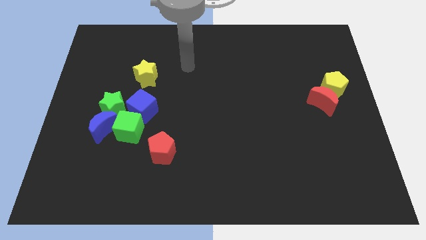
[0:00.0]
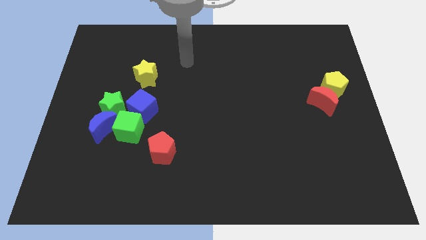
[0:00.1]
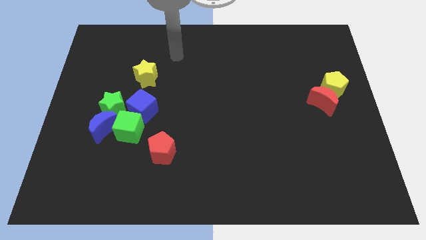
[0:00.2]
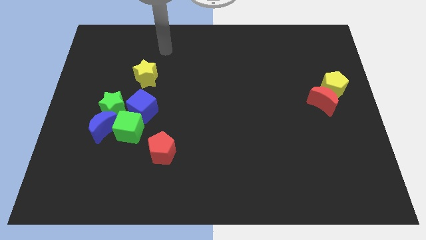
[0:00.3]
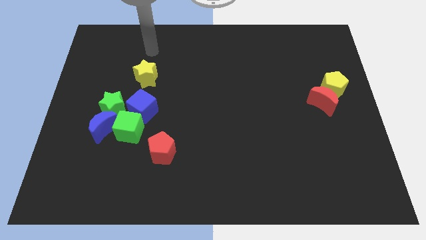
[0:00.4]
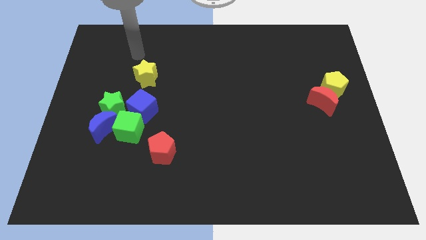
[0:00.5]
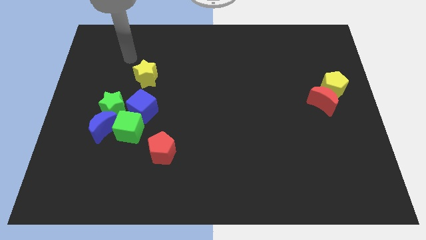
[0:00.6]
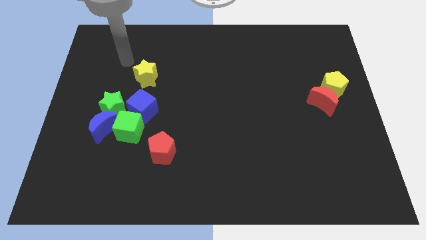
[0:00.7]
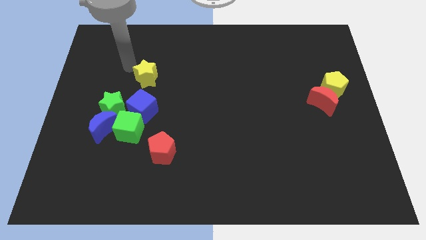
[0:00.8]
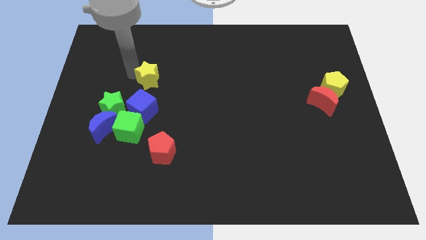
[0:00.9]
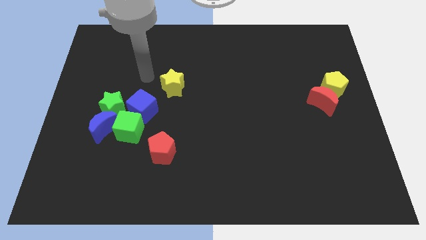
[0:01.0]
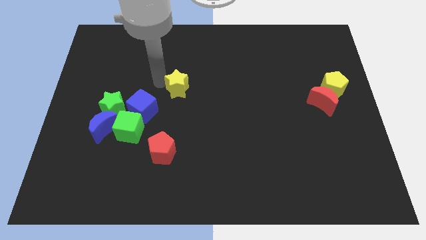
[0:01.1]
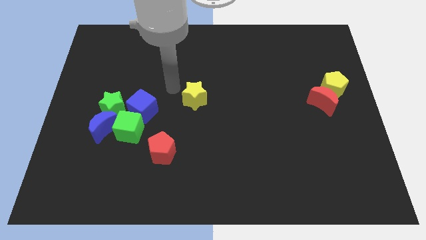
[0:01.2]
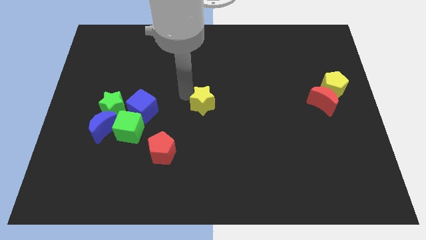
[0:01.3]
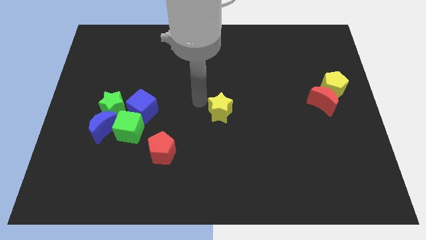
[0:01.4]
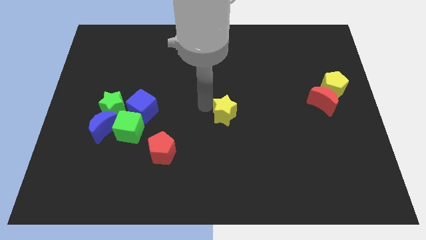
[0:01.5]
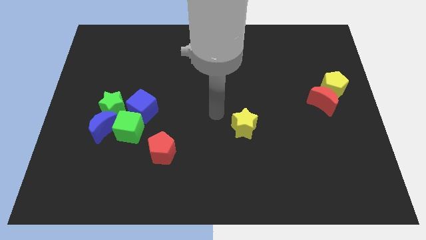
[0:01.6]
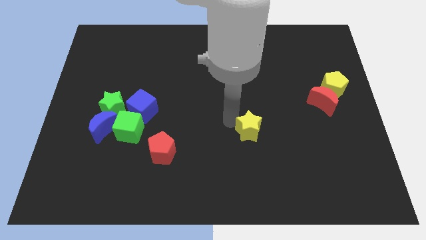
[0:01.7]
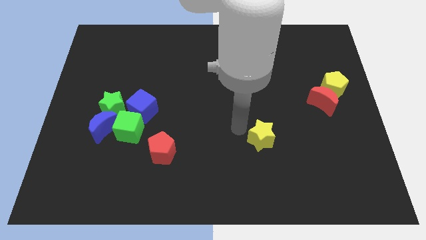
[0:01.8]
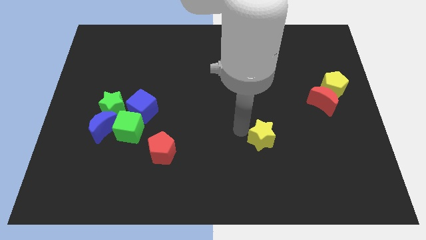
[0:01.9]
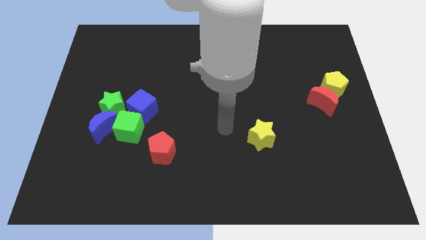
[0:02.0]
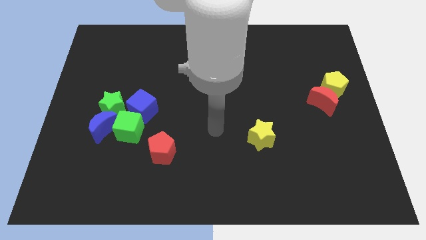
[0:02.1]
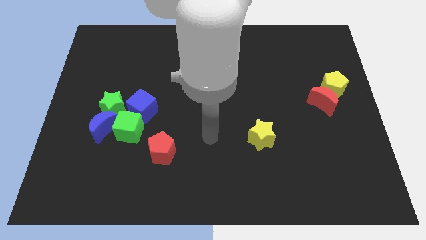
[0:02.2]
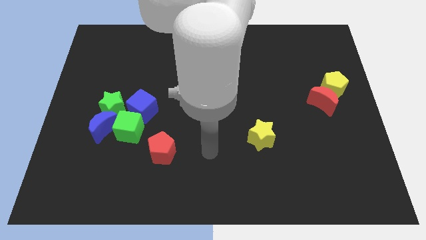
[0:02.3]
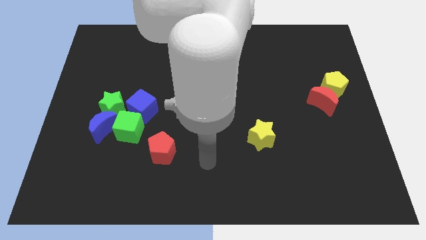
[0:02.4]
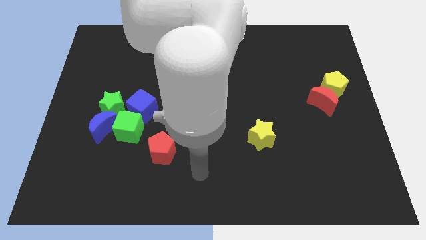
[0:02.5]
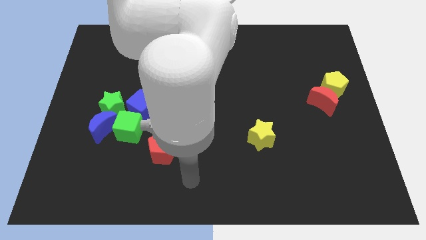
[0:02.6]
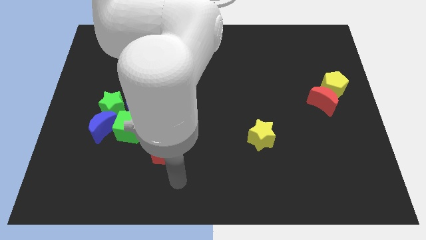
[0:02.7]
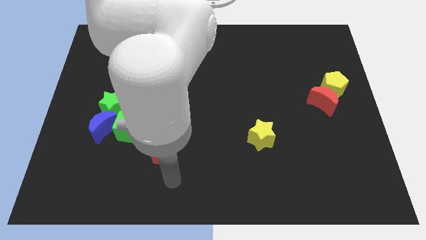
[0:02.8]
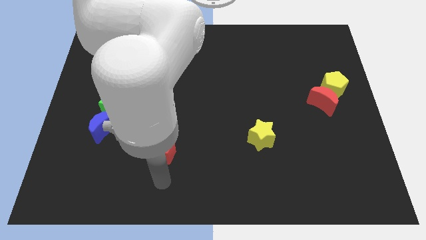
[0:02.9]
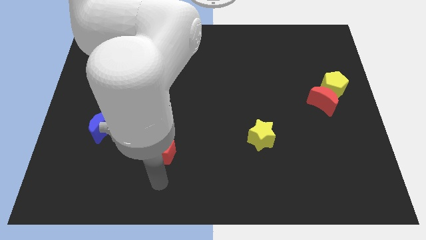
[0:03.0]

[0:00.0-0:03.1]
move yellow star diagonally below to the yellow pentagon and red moon

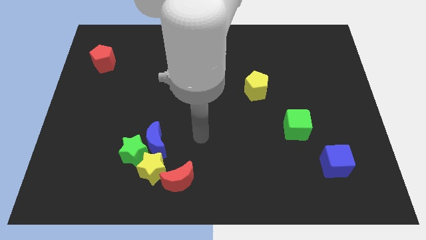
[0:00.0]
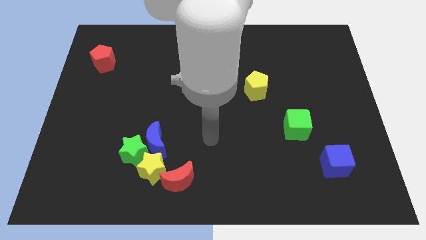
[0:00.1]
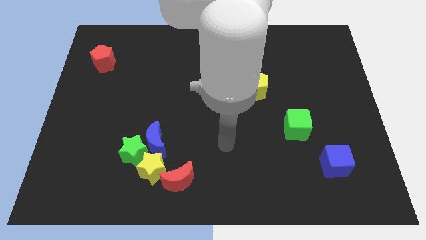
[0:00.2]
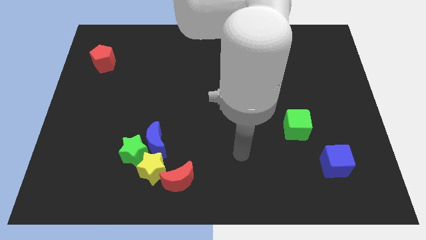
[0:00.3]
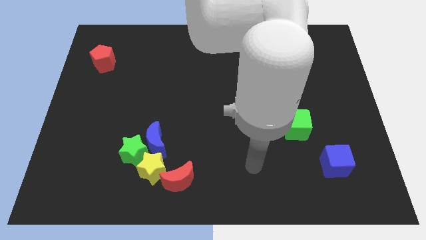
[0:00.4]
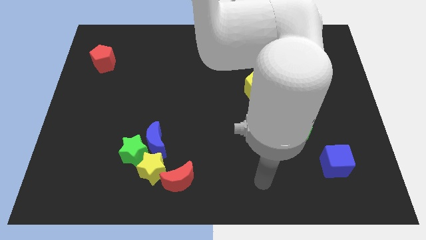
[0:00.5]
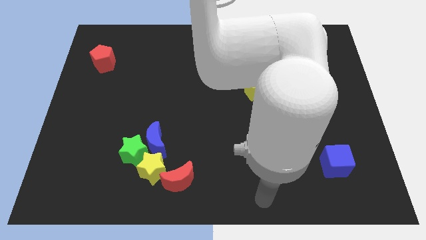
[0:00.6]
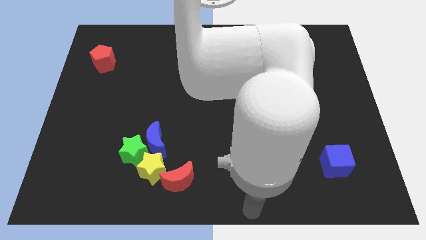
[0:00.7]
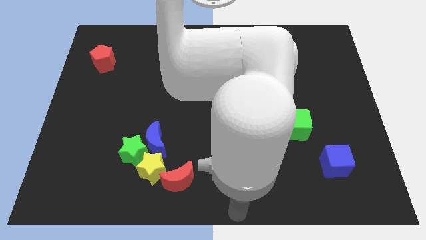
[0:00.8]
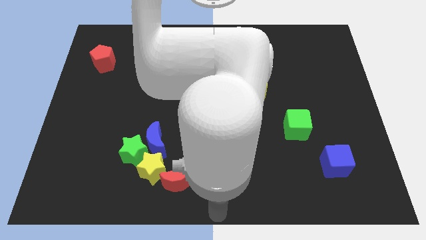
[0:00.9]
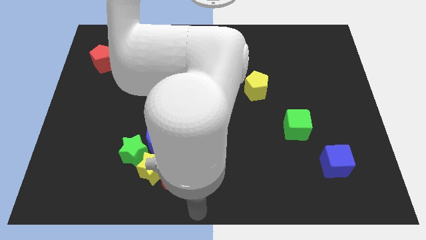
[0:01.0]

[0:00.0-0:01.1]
move your arm to the bottom center of the board

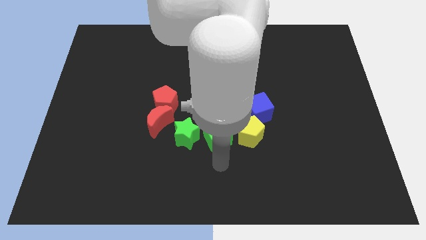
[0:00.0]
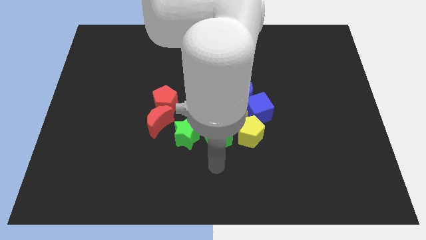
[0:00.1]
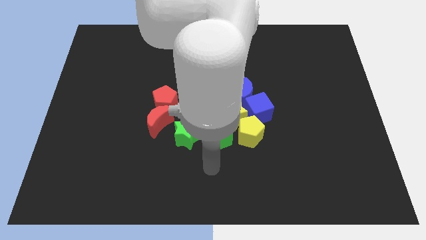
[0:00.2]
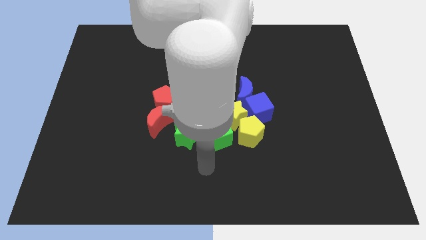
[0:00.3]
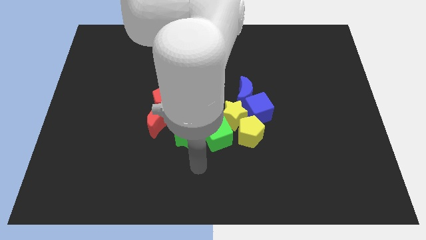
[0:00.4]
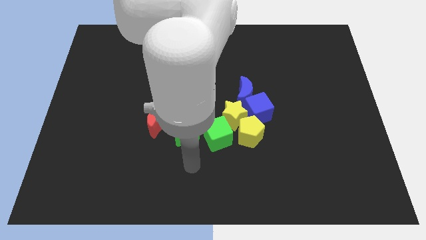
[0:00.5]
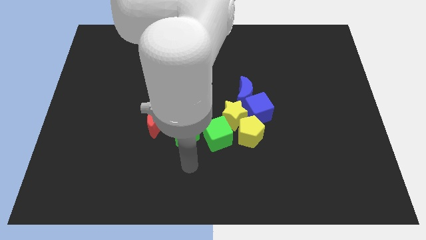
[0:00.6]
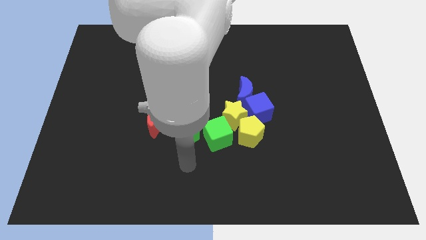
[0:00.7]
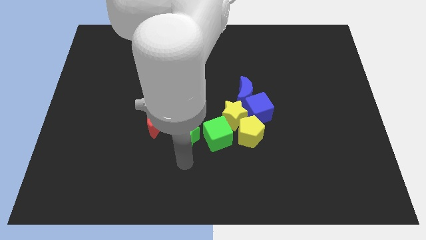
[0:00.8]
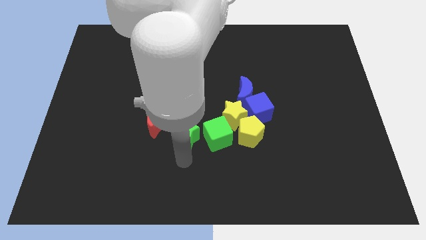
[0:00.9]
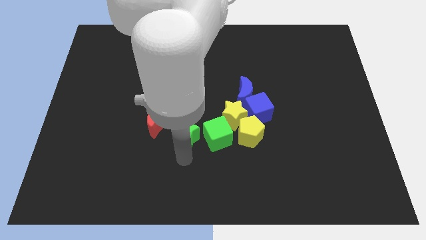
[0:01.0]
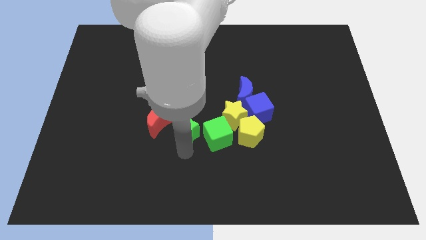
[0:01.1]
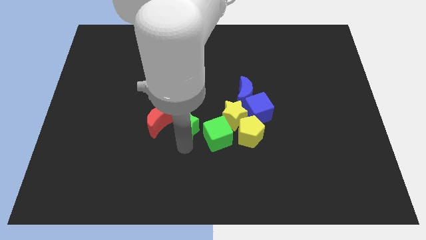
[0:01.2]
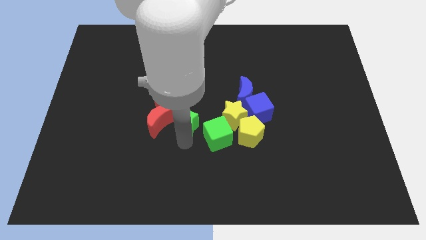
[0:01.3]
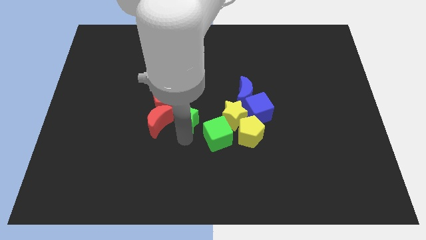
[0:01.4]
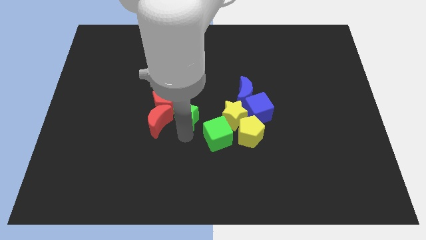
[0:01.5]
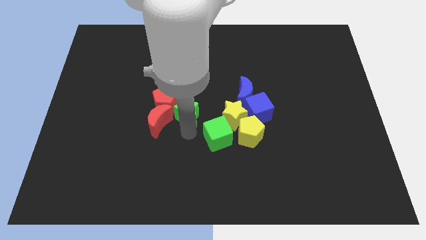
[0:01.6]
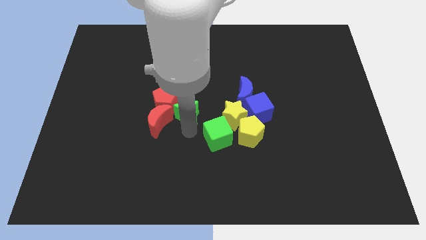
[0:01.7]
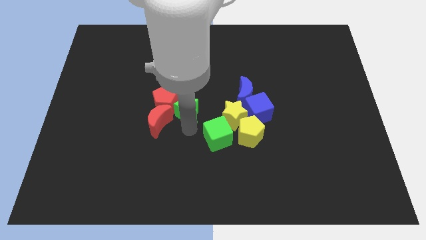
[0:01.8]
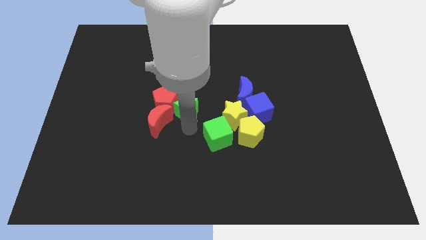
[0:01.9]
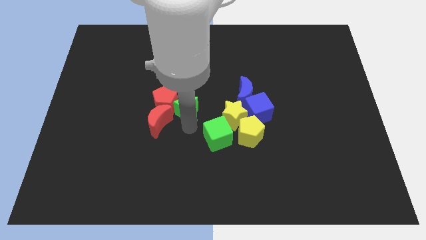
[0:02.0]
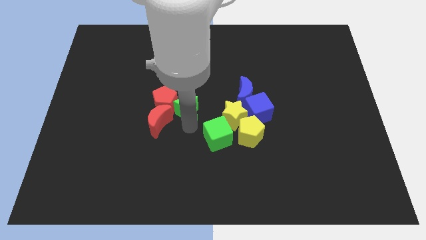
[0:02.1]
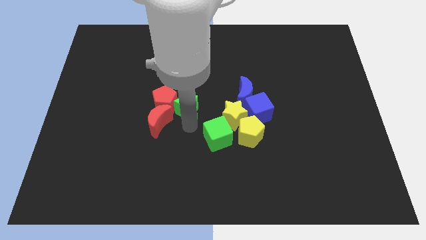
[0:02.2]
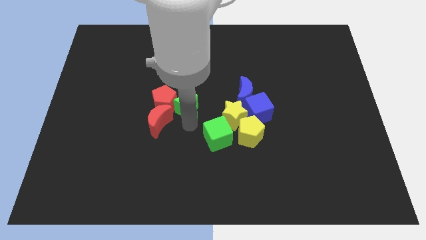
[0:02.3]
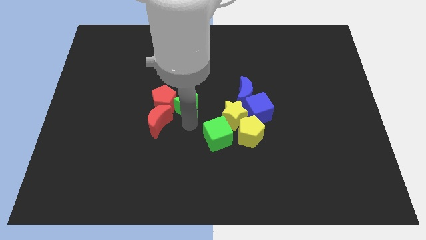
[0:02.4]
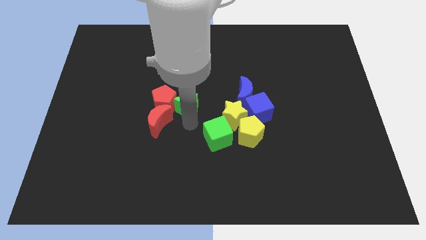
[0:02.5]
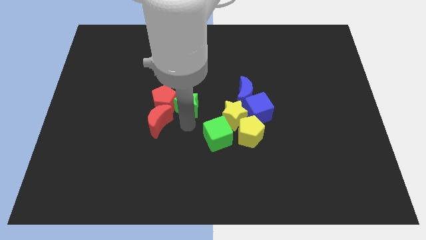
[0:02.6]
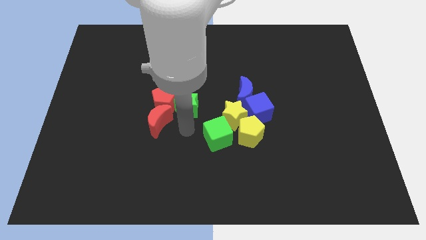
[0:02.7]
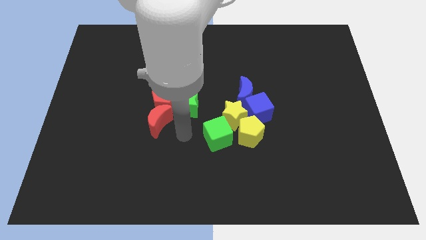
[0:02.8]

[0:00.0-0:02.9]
drag the green star close to the red pentagon

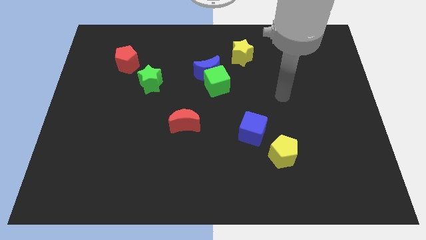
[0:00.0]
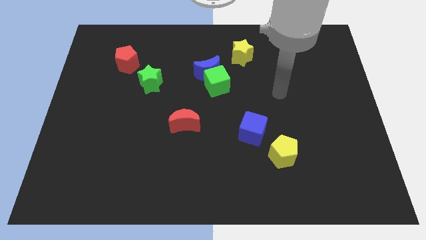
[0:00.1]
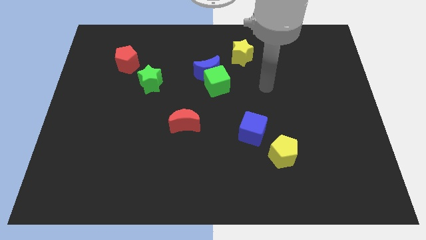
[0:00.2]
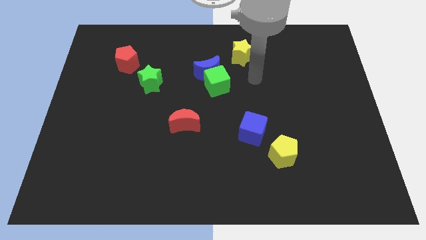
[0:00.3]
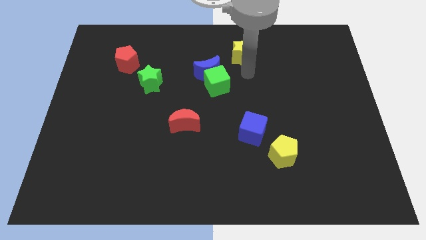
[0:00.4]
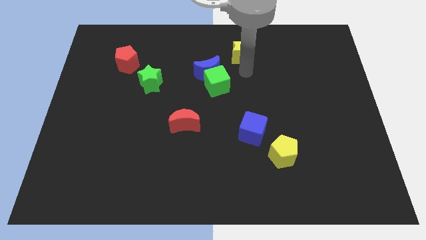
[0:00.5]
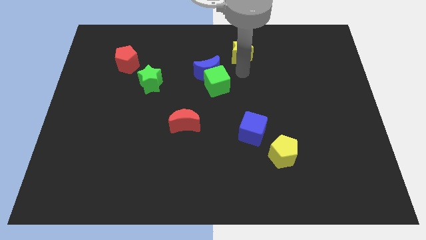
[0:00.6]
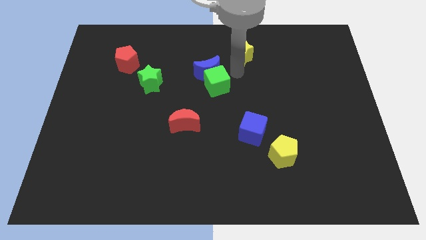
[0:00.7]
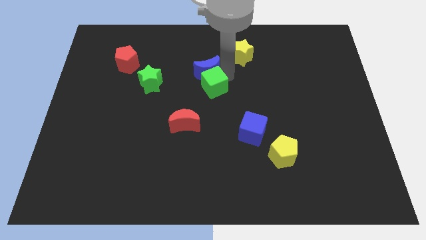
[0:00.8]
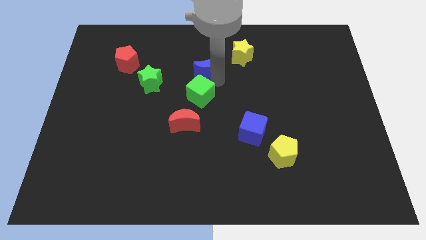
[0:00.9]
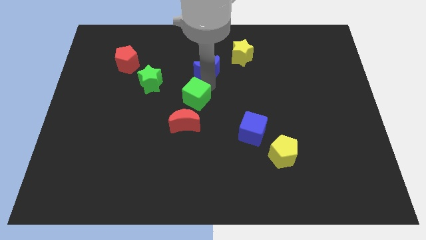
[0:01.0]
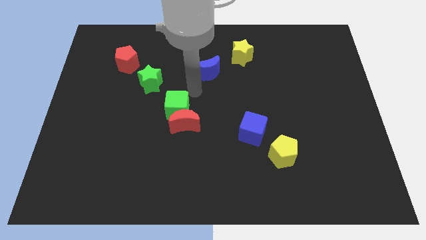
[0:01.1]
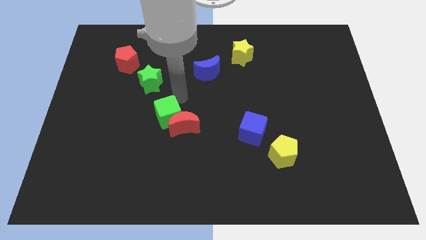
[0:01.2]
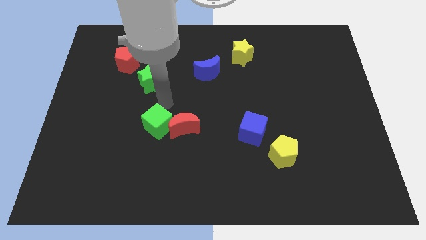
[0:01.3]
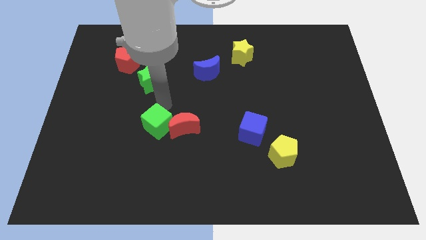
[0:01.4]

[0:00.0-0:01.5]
move the green cube to the left of the red crescent

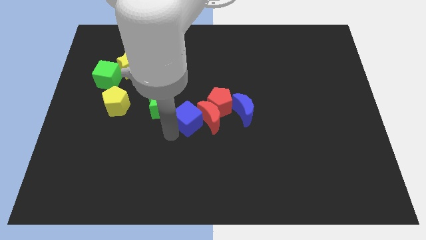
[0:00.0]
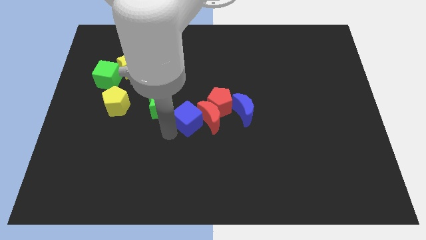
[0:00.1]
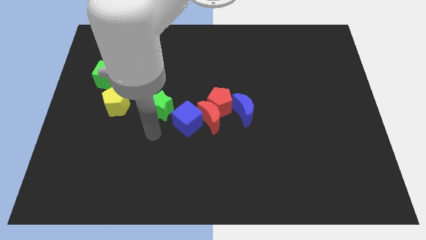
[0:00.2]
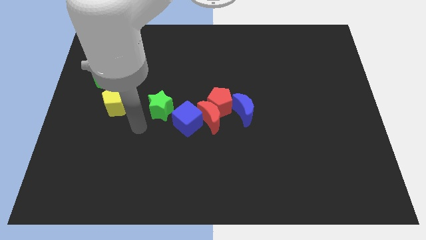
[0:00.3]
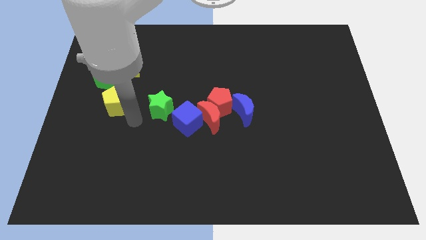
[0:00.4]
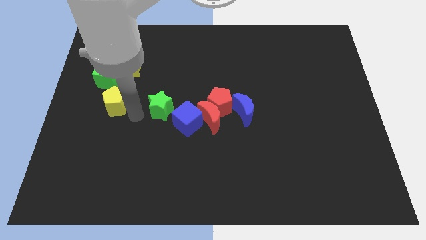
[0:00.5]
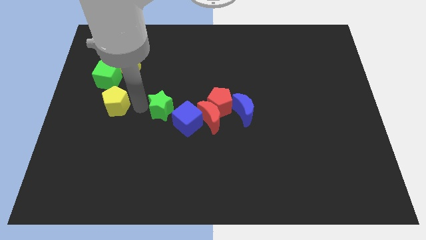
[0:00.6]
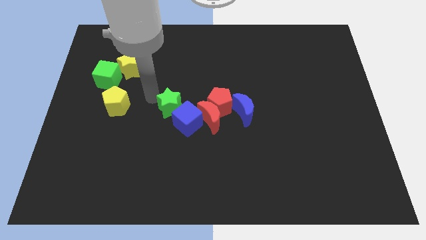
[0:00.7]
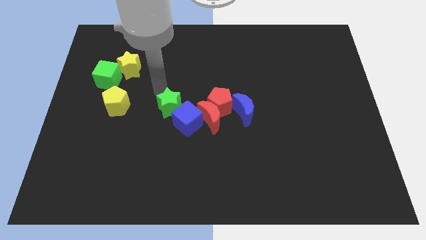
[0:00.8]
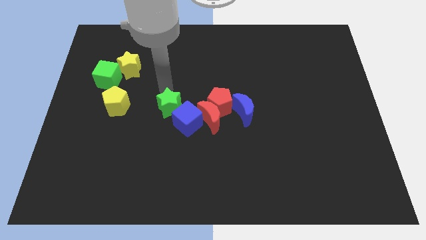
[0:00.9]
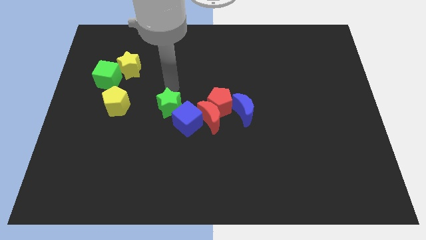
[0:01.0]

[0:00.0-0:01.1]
move the green star slightly to the right
